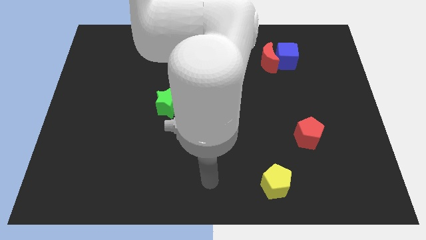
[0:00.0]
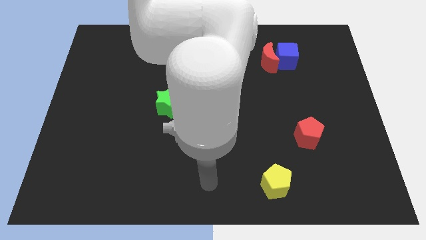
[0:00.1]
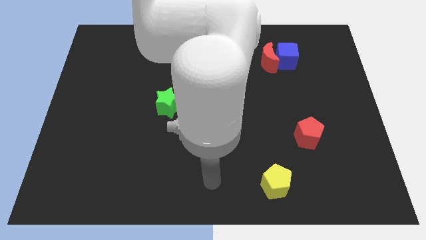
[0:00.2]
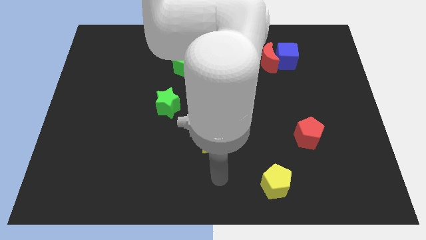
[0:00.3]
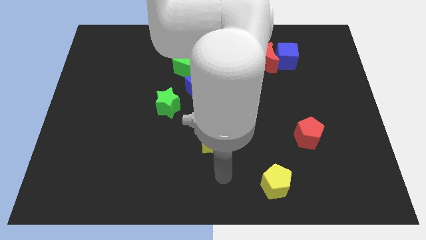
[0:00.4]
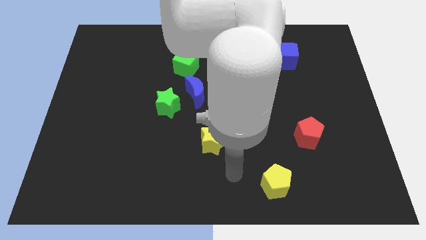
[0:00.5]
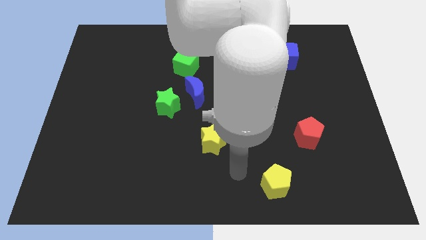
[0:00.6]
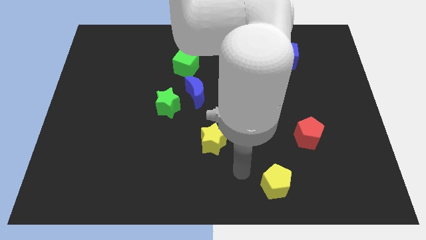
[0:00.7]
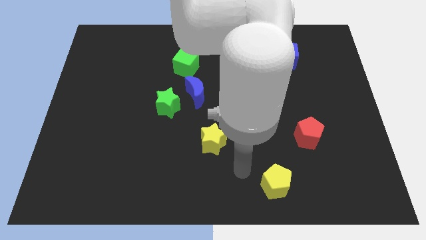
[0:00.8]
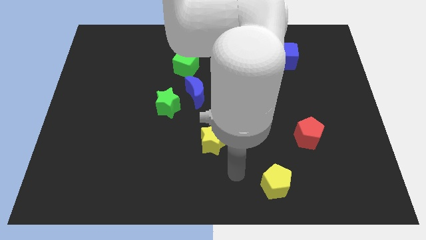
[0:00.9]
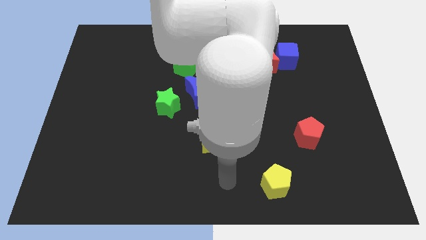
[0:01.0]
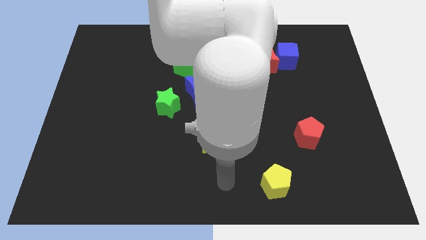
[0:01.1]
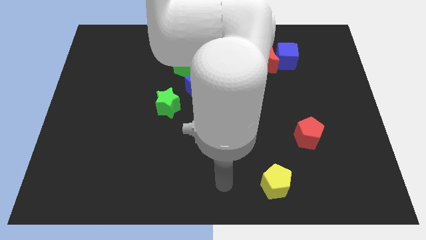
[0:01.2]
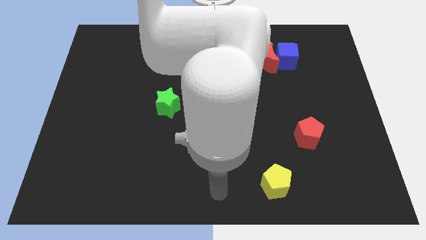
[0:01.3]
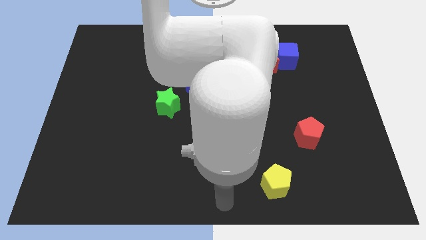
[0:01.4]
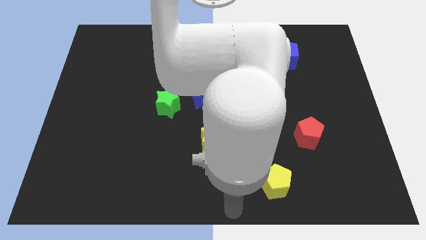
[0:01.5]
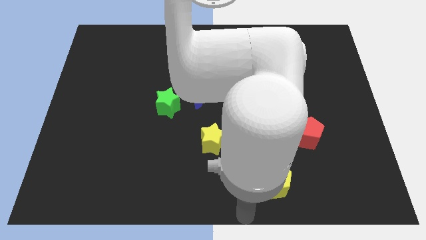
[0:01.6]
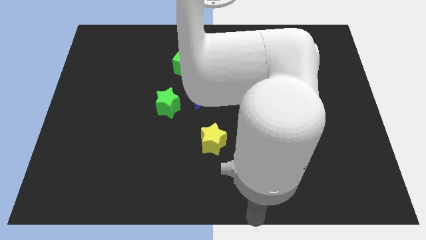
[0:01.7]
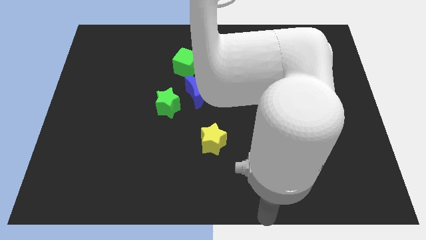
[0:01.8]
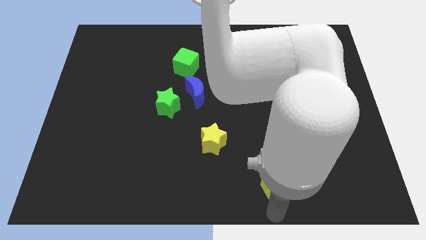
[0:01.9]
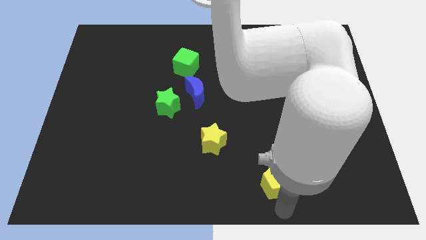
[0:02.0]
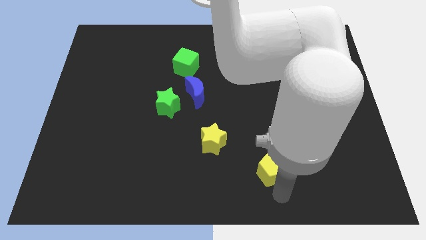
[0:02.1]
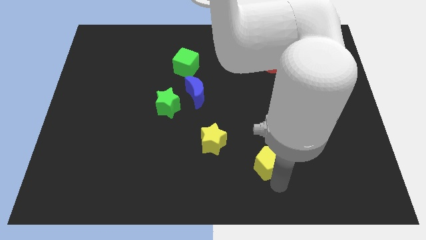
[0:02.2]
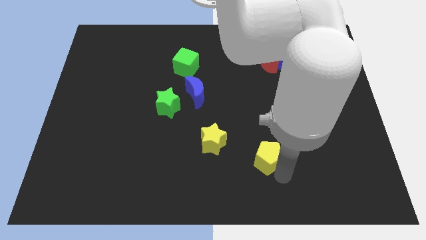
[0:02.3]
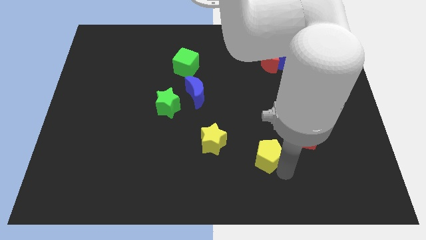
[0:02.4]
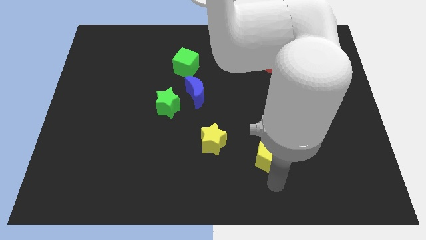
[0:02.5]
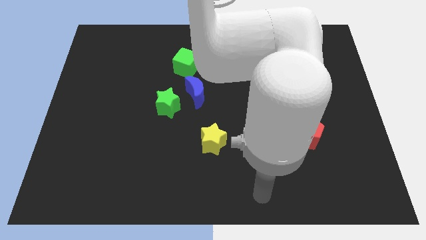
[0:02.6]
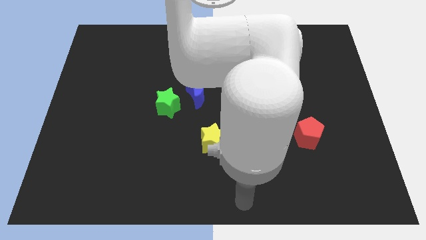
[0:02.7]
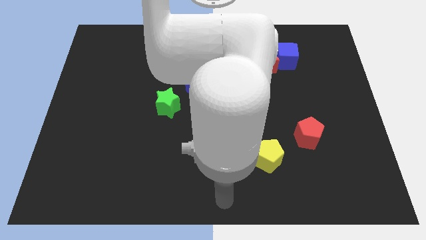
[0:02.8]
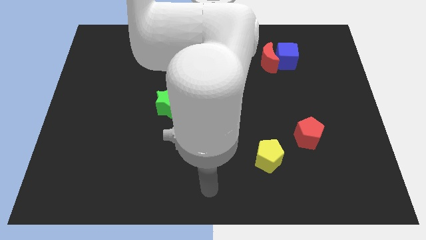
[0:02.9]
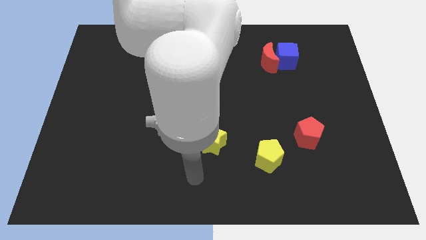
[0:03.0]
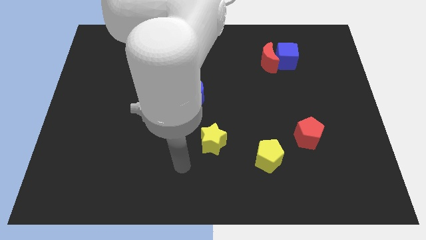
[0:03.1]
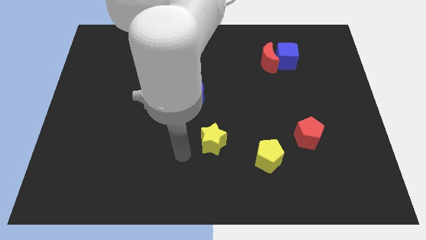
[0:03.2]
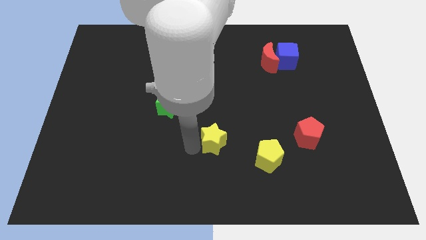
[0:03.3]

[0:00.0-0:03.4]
place the yellow pentagon diagonal to the red pentagon

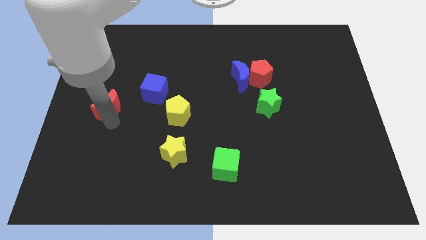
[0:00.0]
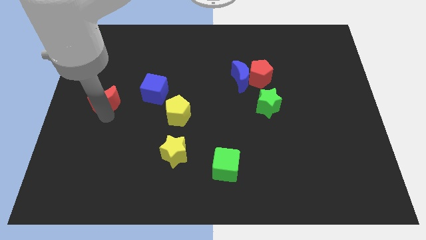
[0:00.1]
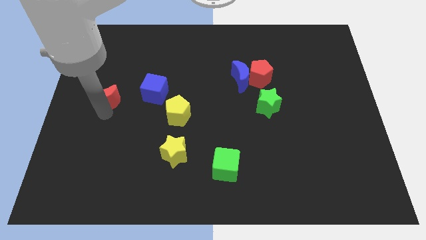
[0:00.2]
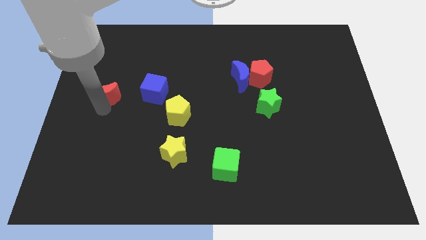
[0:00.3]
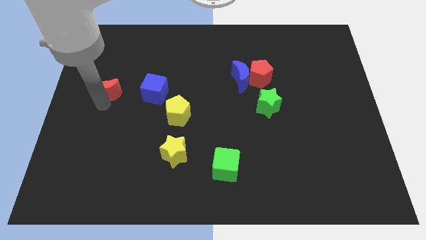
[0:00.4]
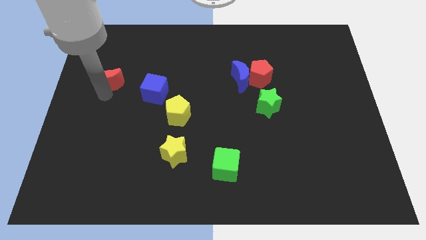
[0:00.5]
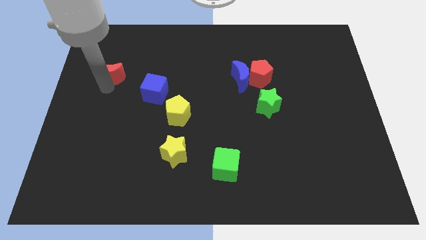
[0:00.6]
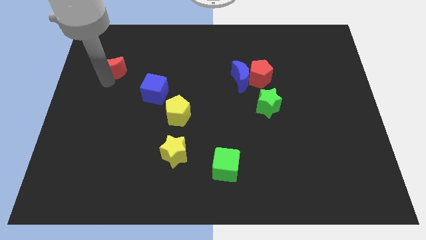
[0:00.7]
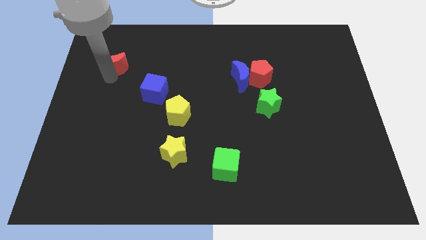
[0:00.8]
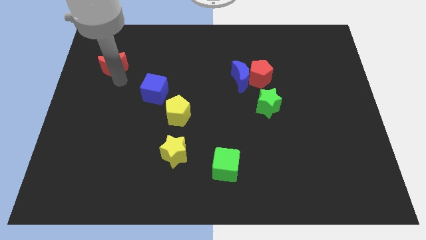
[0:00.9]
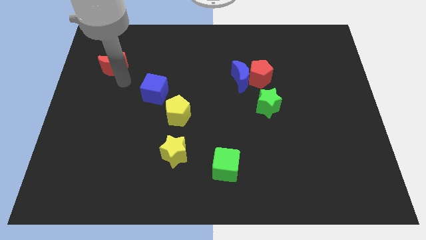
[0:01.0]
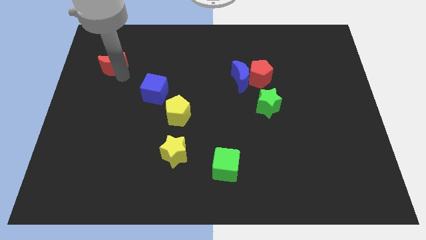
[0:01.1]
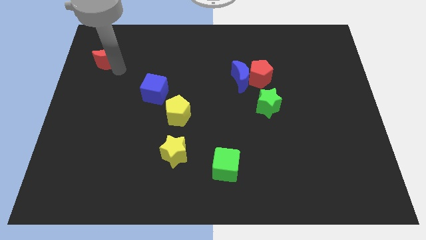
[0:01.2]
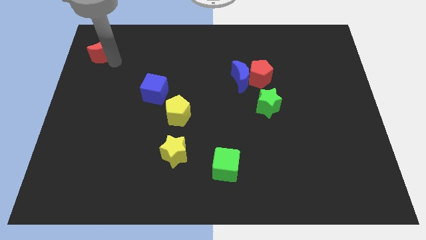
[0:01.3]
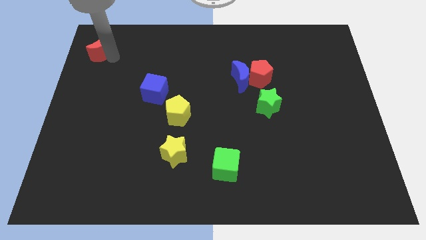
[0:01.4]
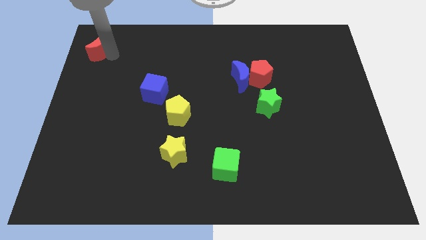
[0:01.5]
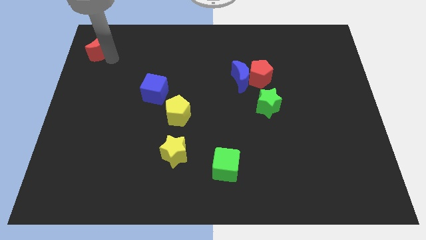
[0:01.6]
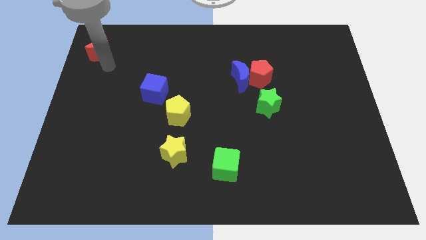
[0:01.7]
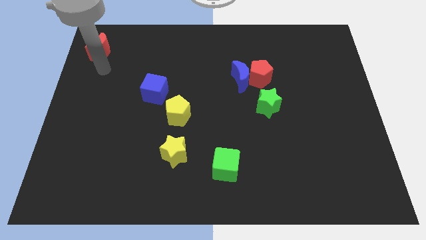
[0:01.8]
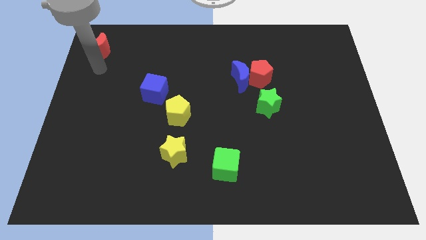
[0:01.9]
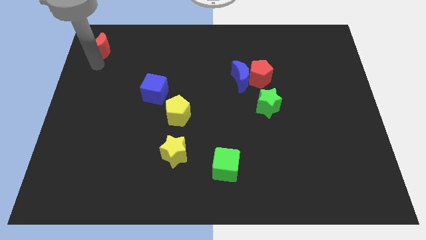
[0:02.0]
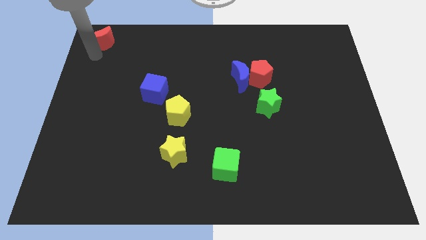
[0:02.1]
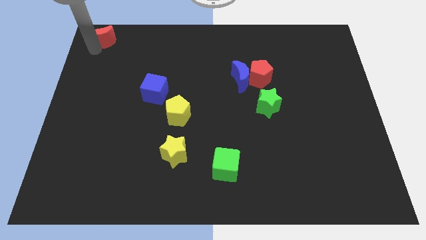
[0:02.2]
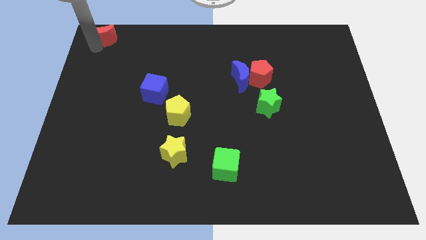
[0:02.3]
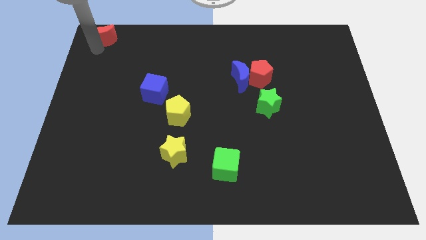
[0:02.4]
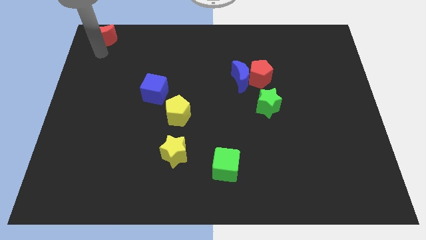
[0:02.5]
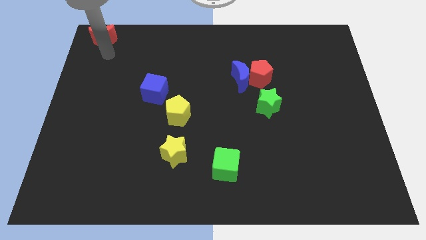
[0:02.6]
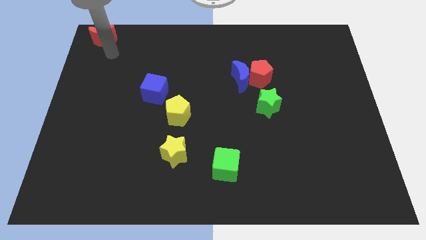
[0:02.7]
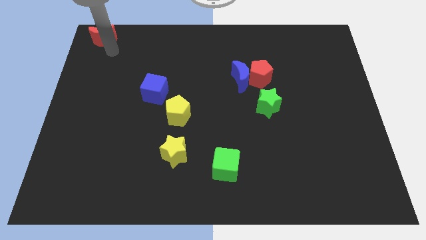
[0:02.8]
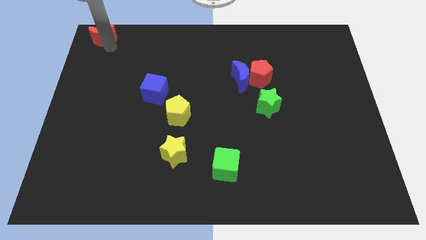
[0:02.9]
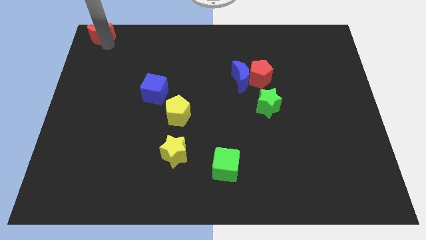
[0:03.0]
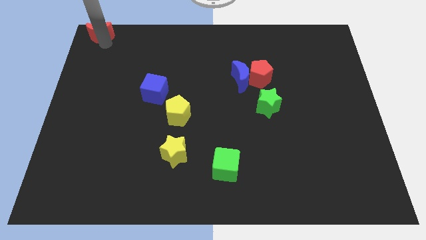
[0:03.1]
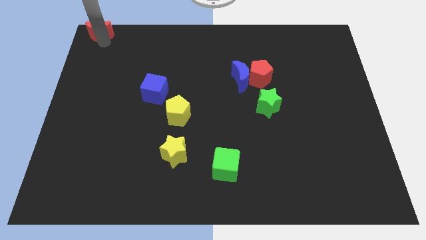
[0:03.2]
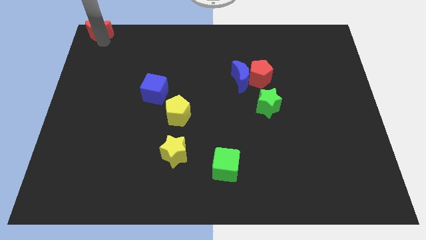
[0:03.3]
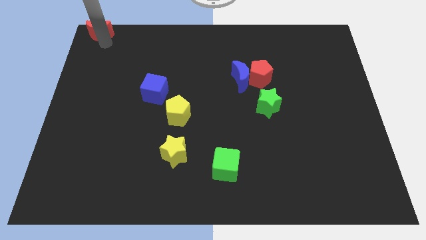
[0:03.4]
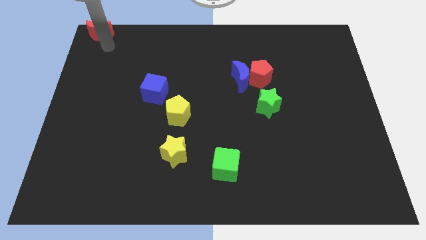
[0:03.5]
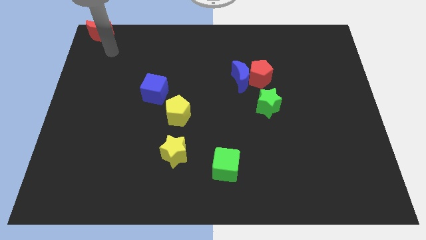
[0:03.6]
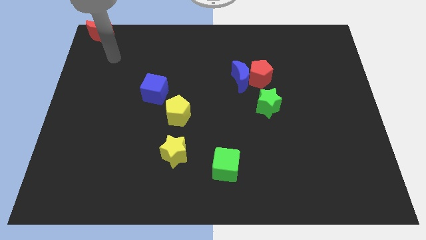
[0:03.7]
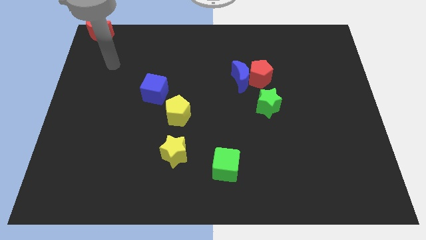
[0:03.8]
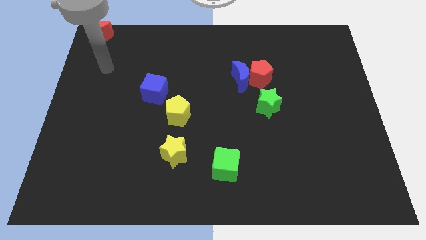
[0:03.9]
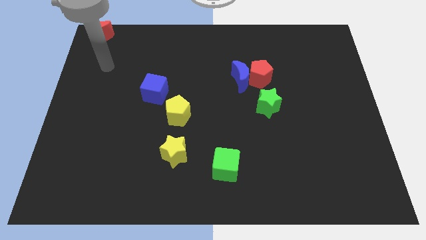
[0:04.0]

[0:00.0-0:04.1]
move the red crescent to the top left corner

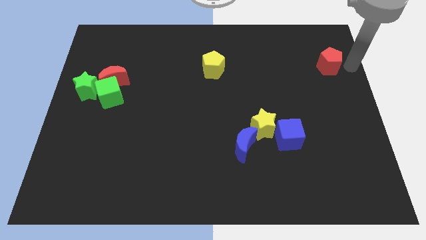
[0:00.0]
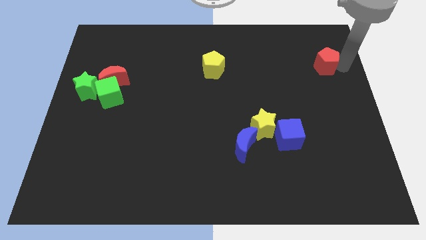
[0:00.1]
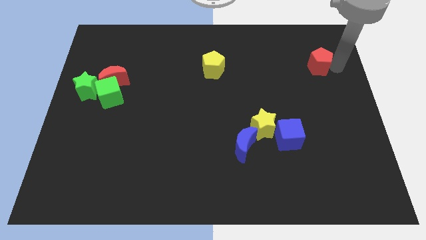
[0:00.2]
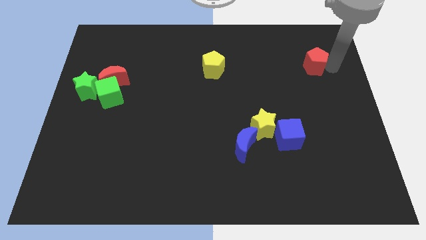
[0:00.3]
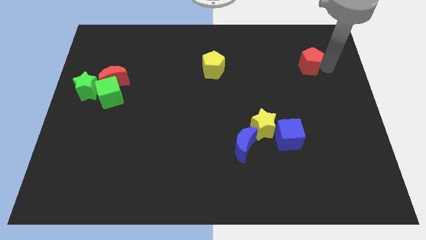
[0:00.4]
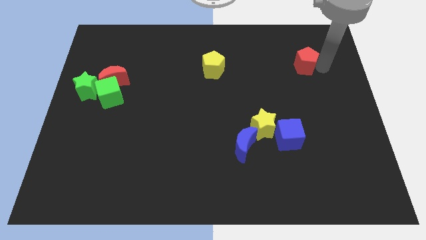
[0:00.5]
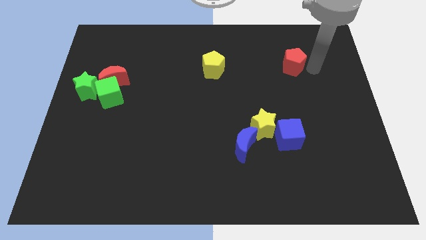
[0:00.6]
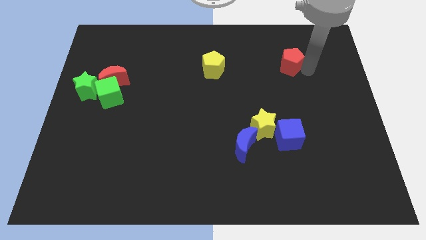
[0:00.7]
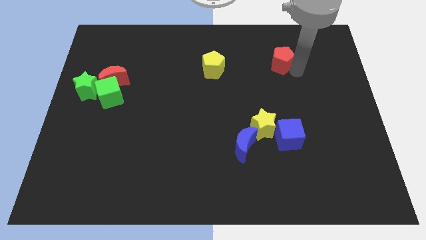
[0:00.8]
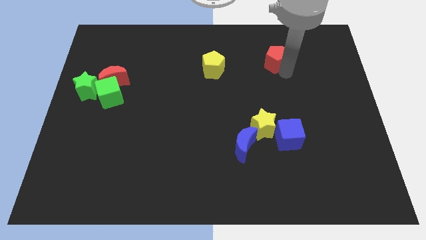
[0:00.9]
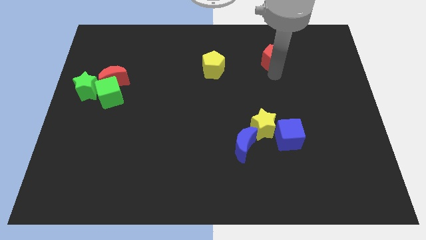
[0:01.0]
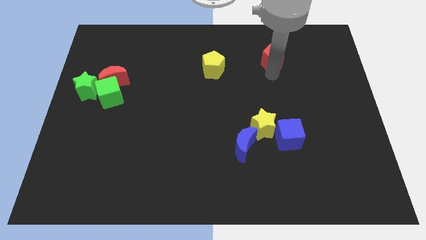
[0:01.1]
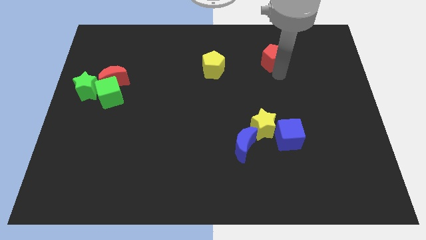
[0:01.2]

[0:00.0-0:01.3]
push the red pentagon towards the yellow pentagon

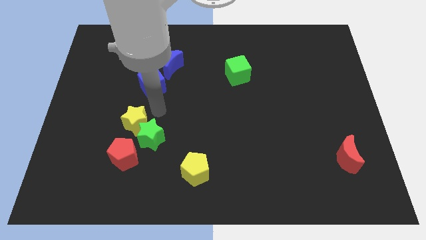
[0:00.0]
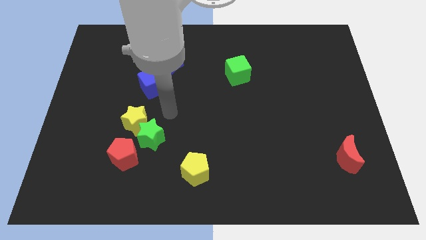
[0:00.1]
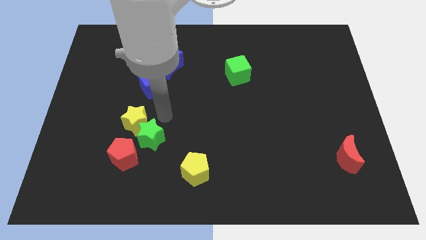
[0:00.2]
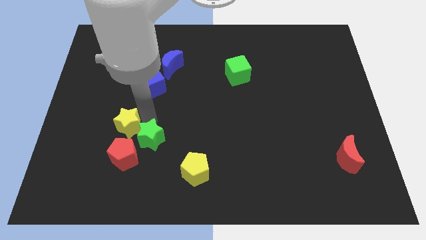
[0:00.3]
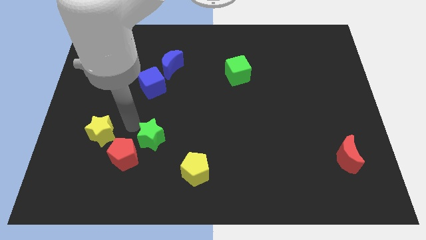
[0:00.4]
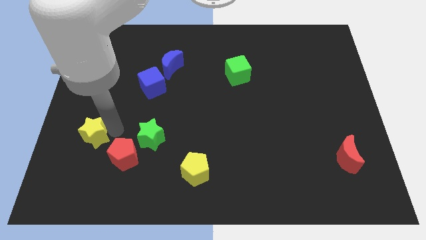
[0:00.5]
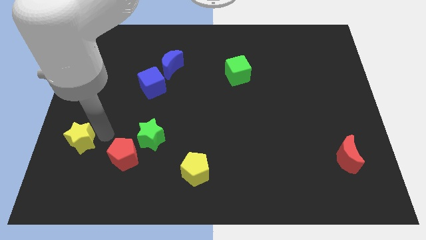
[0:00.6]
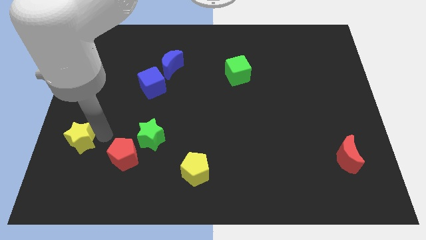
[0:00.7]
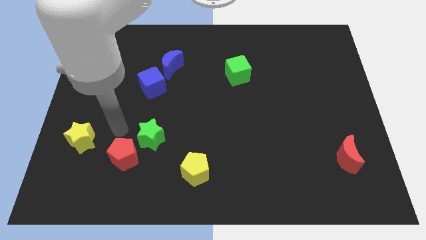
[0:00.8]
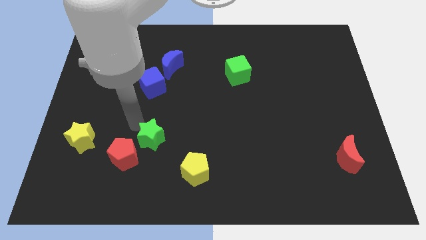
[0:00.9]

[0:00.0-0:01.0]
push the yellow star to the left diagonal of red pentagon
